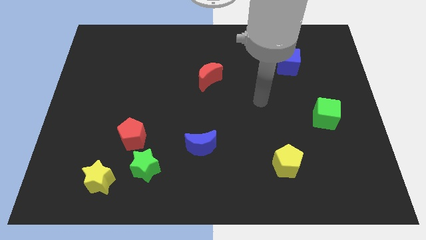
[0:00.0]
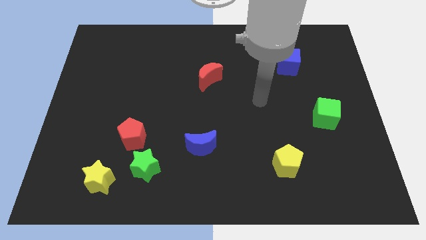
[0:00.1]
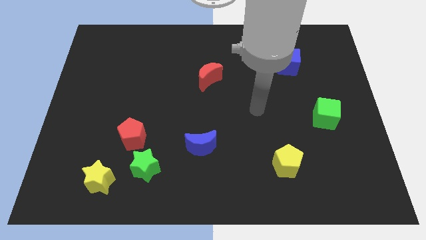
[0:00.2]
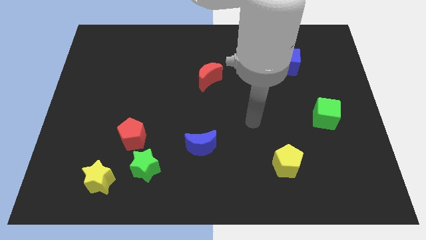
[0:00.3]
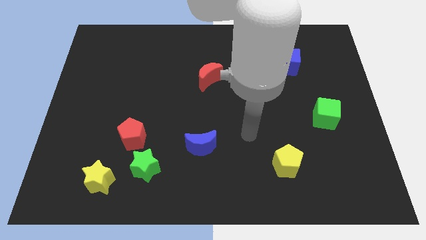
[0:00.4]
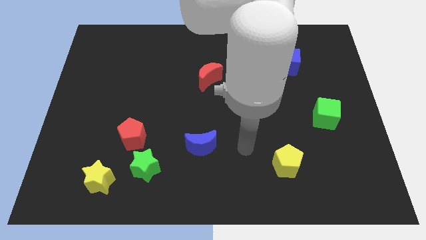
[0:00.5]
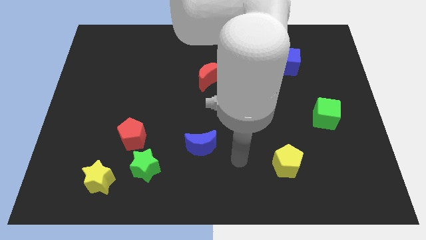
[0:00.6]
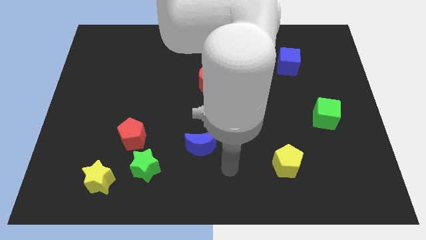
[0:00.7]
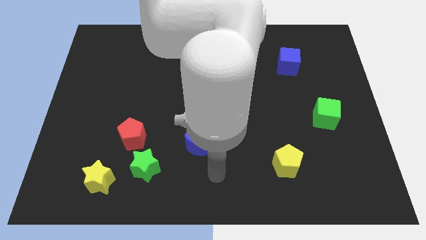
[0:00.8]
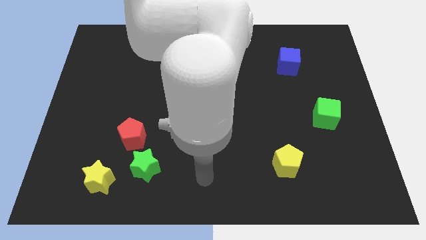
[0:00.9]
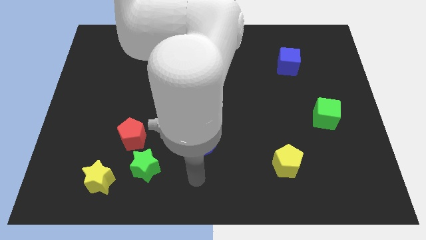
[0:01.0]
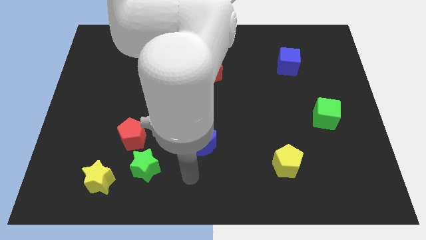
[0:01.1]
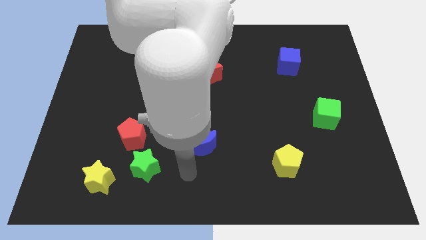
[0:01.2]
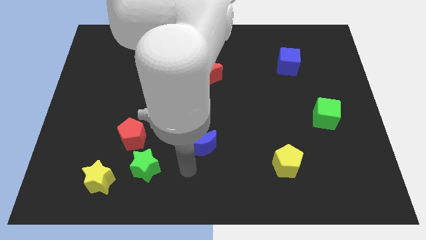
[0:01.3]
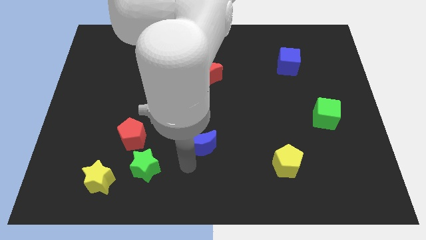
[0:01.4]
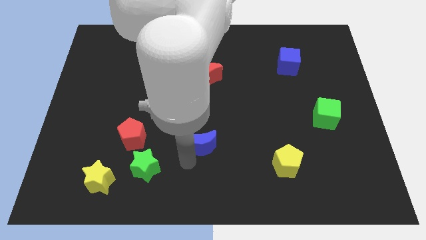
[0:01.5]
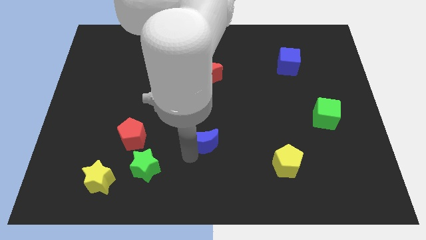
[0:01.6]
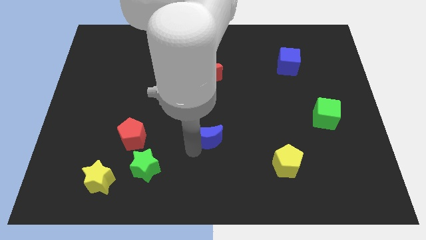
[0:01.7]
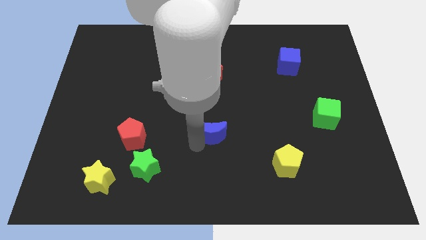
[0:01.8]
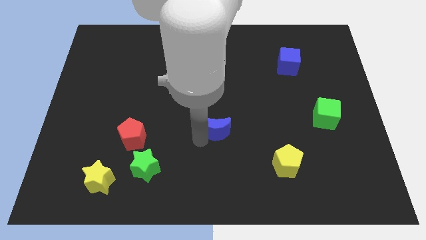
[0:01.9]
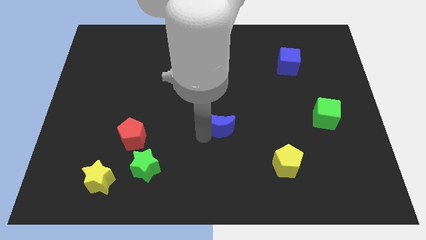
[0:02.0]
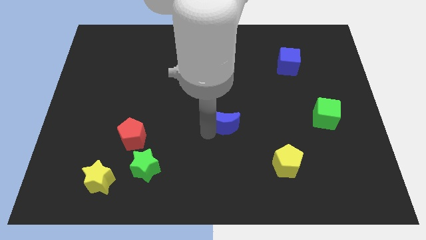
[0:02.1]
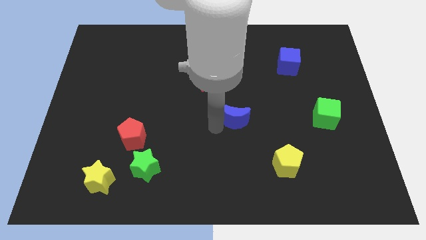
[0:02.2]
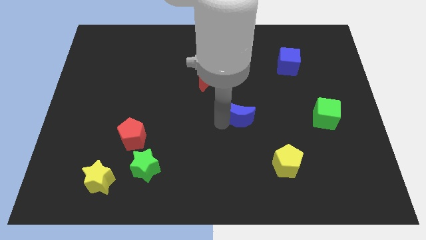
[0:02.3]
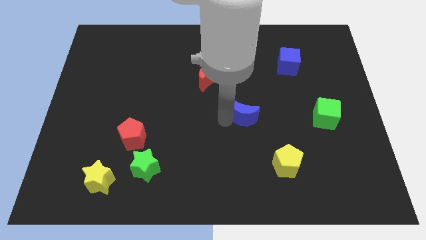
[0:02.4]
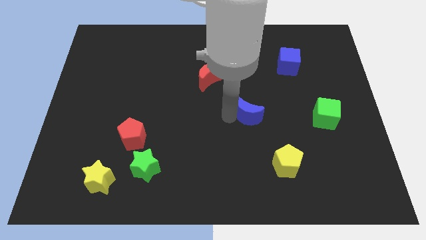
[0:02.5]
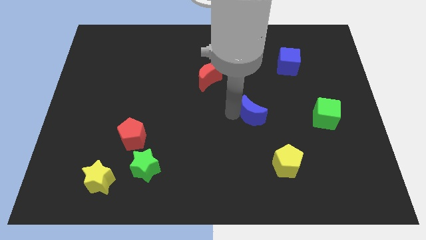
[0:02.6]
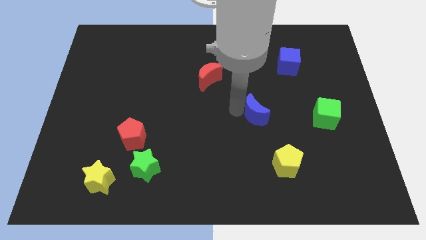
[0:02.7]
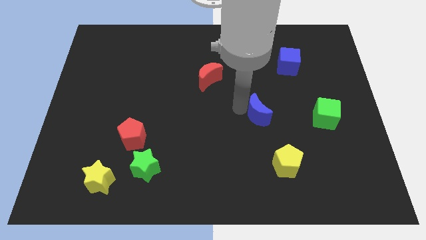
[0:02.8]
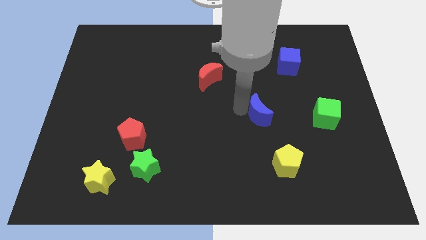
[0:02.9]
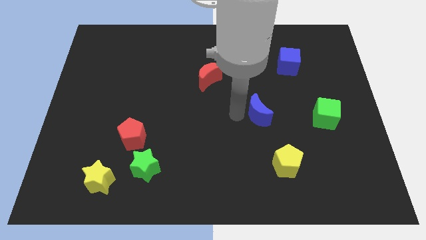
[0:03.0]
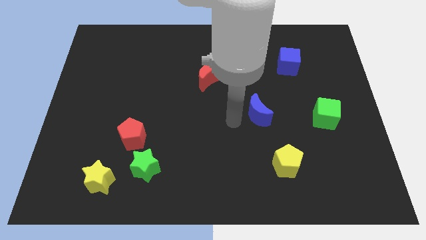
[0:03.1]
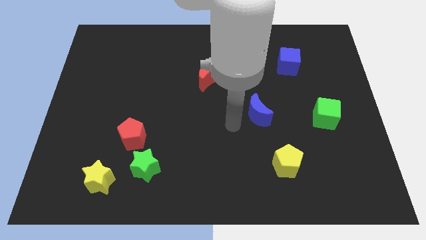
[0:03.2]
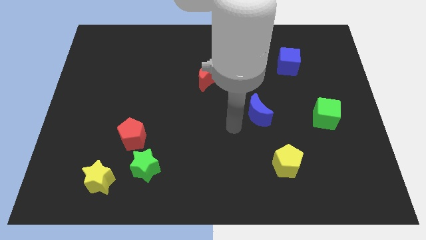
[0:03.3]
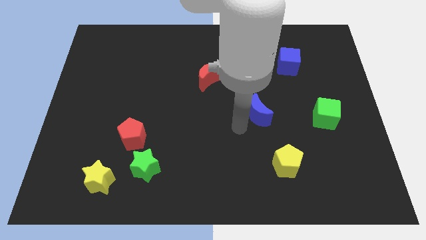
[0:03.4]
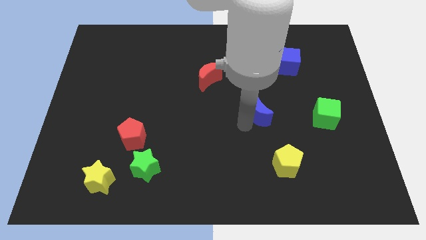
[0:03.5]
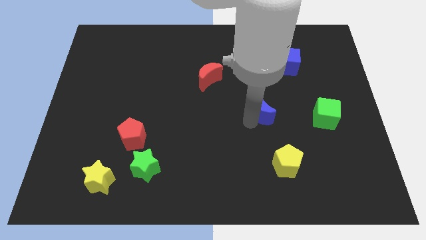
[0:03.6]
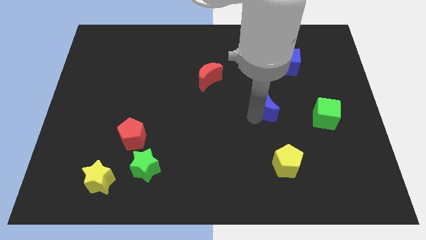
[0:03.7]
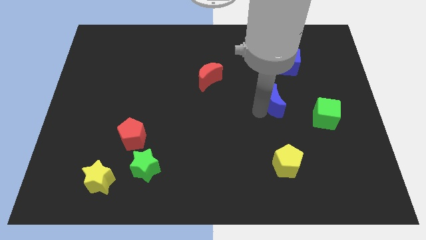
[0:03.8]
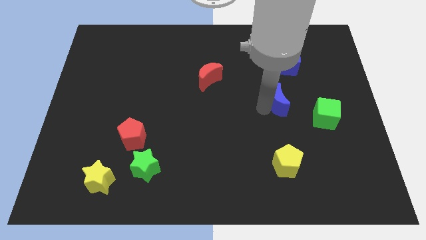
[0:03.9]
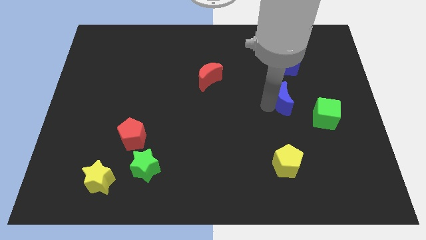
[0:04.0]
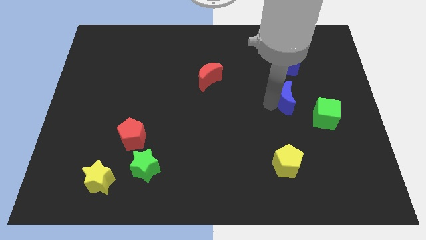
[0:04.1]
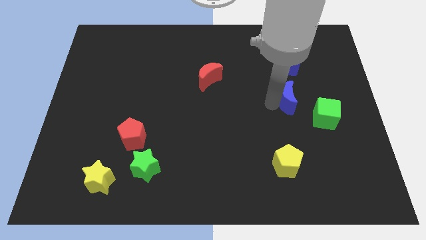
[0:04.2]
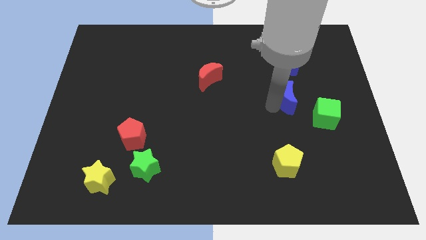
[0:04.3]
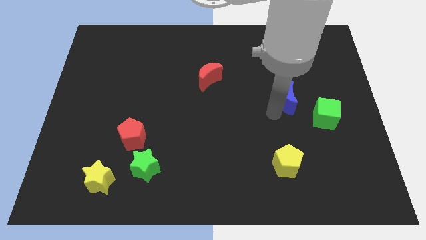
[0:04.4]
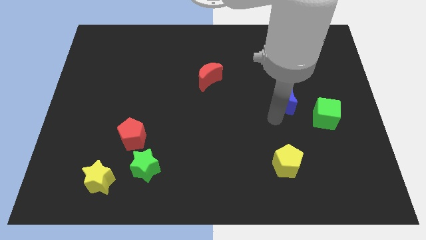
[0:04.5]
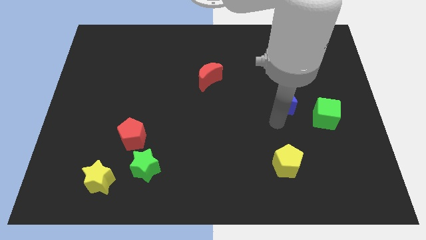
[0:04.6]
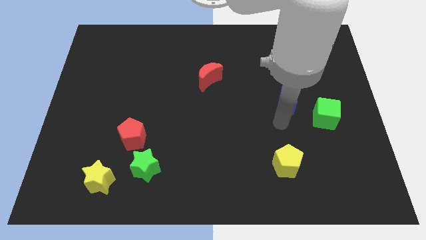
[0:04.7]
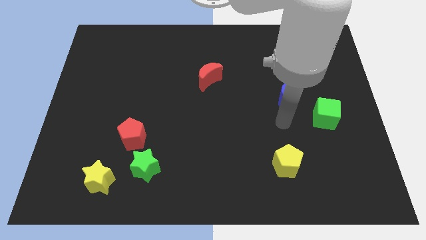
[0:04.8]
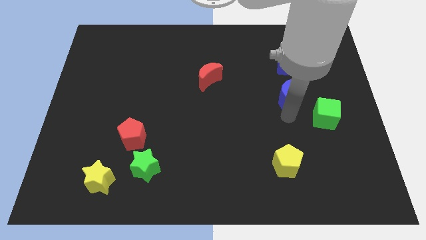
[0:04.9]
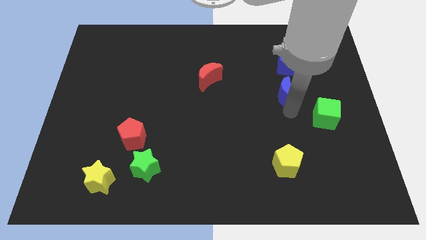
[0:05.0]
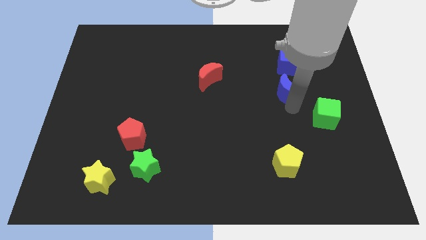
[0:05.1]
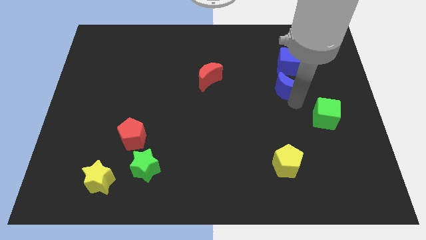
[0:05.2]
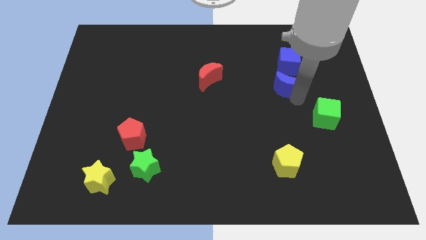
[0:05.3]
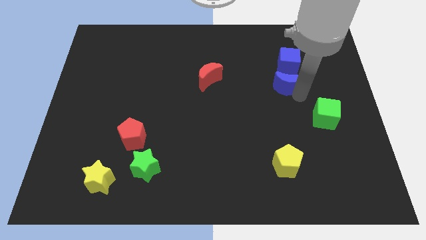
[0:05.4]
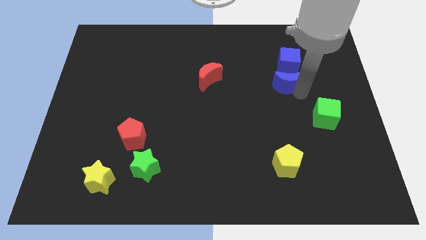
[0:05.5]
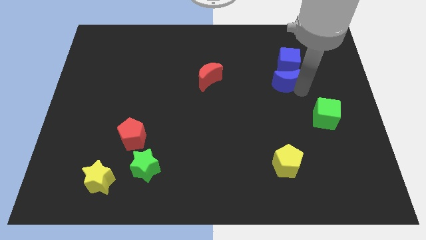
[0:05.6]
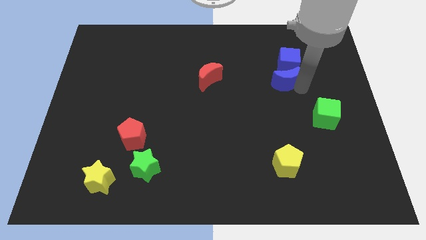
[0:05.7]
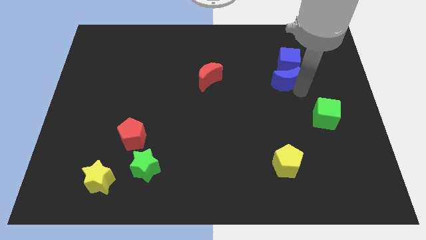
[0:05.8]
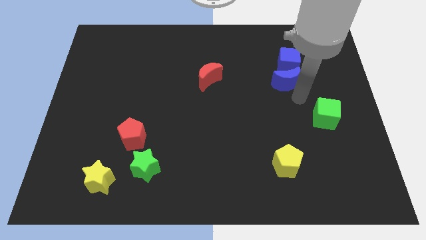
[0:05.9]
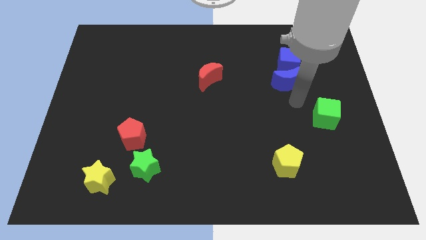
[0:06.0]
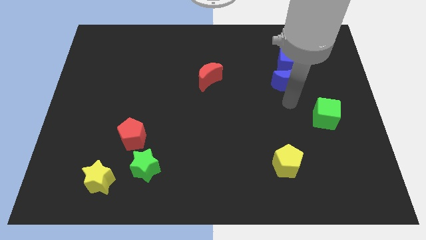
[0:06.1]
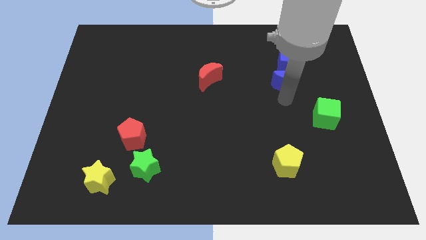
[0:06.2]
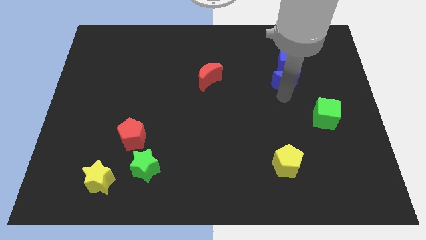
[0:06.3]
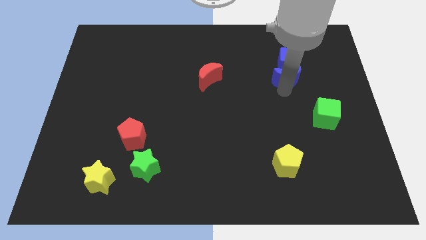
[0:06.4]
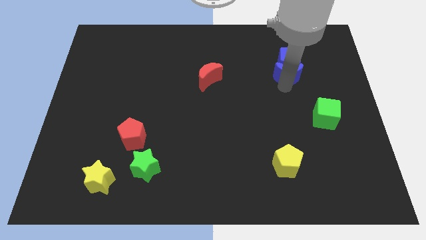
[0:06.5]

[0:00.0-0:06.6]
put the blue moon towards the blue cube

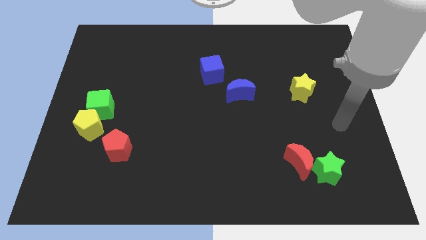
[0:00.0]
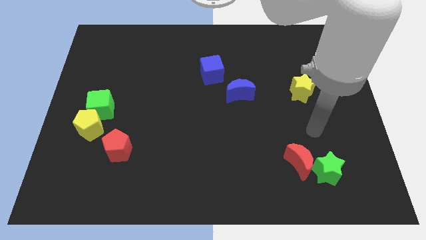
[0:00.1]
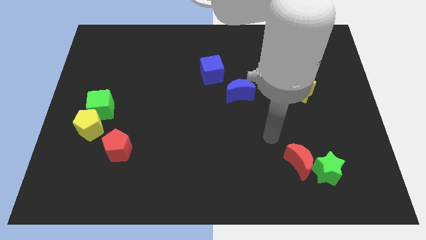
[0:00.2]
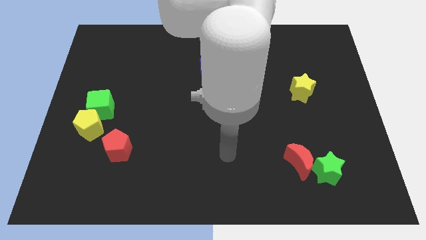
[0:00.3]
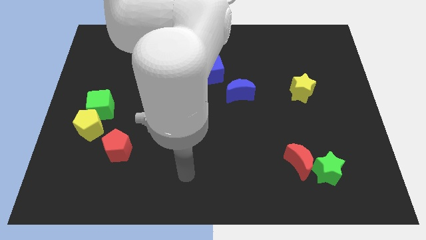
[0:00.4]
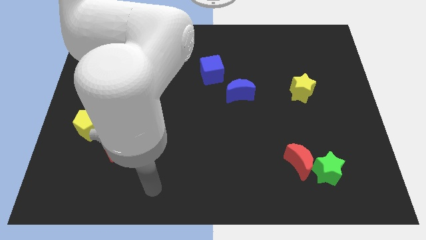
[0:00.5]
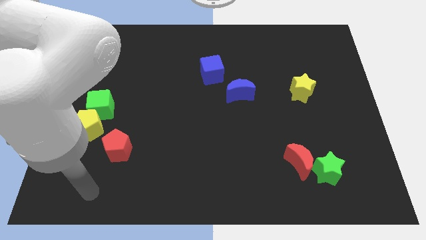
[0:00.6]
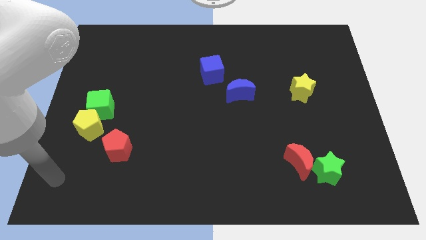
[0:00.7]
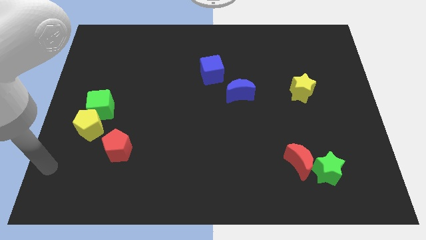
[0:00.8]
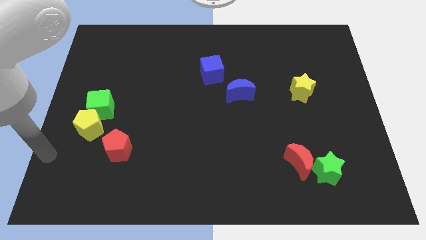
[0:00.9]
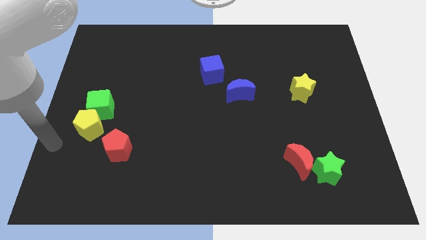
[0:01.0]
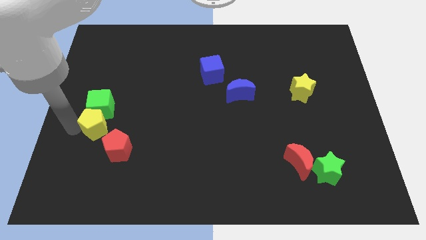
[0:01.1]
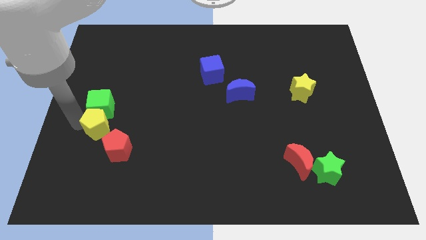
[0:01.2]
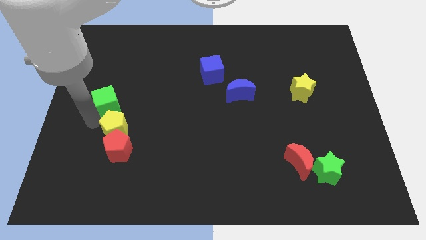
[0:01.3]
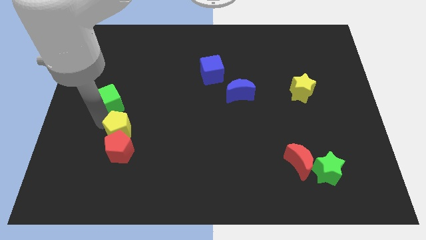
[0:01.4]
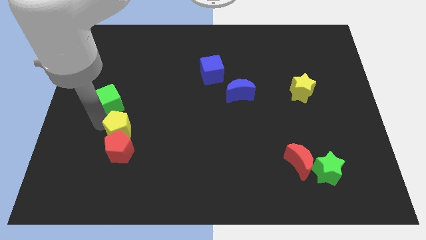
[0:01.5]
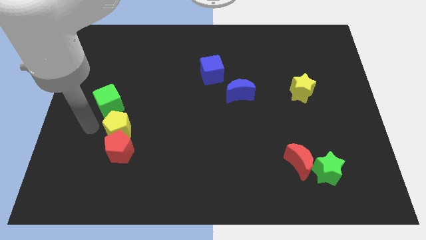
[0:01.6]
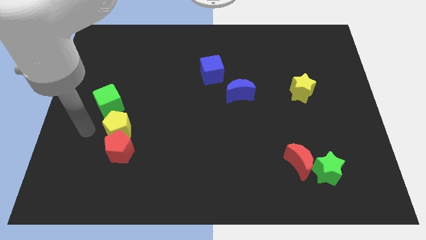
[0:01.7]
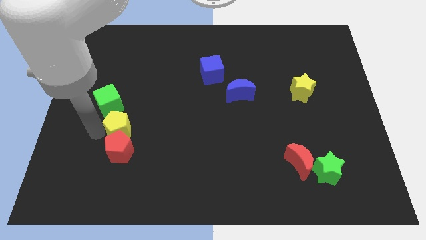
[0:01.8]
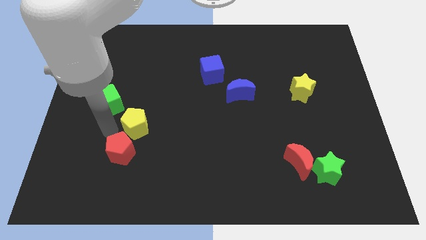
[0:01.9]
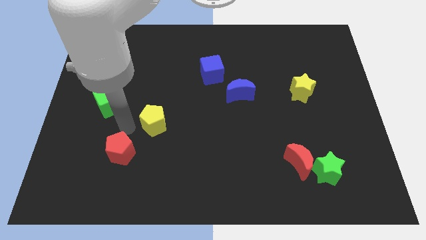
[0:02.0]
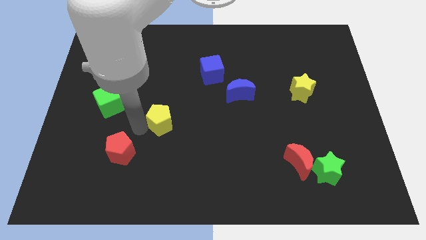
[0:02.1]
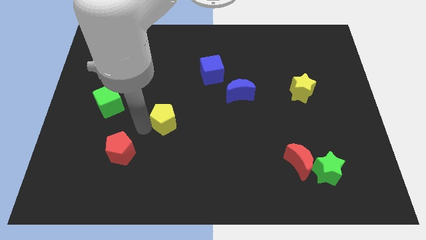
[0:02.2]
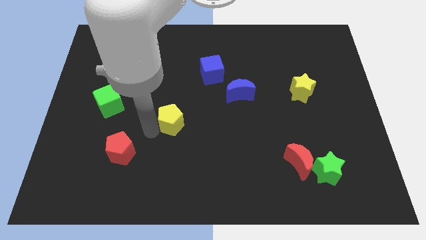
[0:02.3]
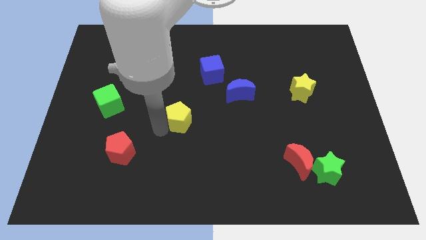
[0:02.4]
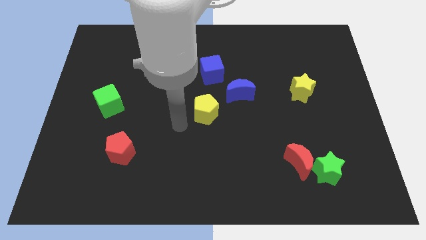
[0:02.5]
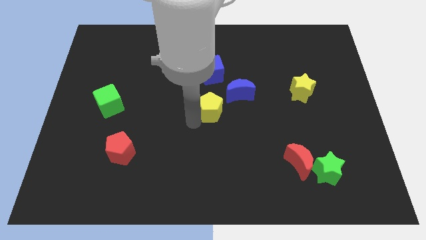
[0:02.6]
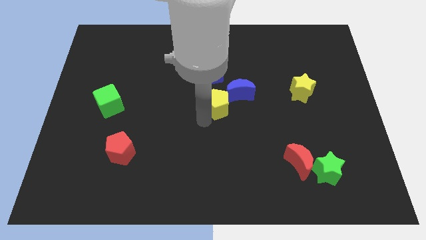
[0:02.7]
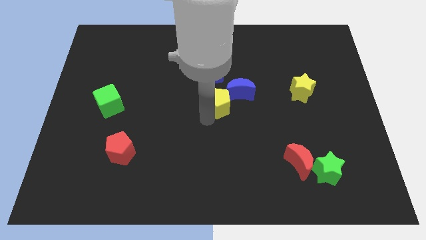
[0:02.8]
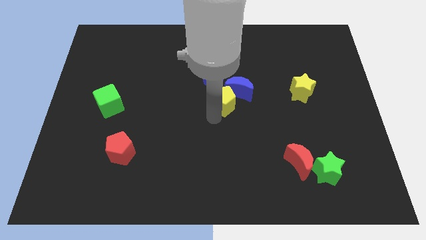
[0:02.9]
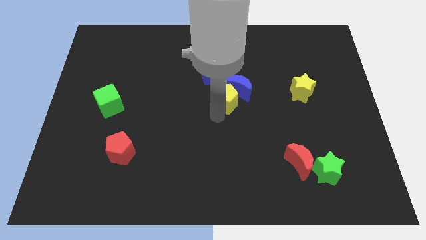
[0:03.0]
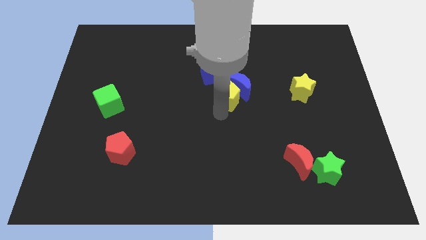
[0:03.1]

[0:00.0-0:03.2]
push the yellow pentagon close to the blue moon
